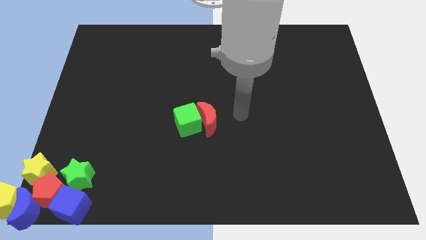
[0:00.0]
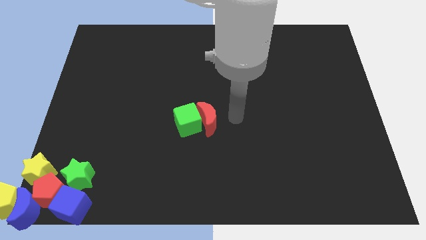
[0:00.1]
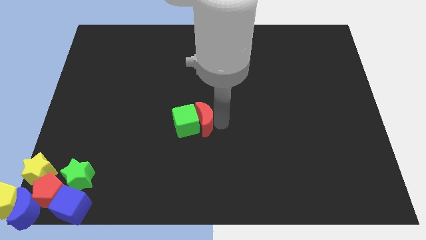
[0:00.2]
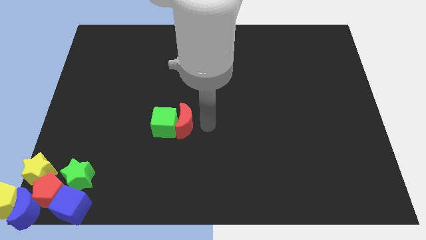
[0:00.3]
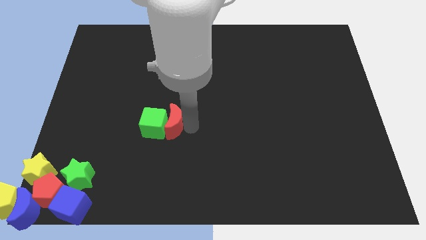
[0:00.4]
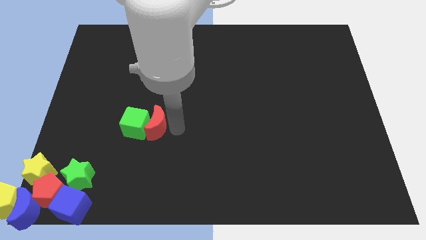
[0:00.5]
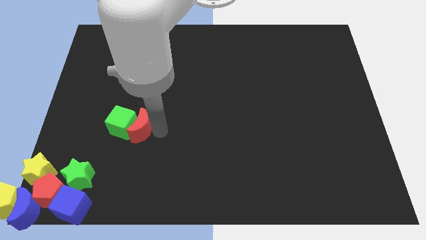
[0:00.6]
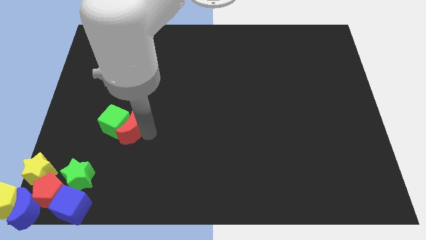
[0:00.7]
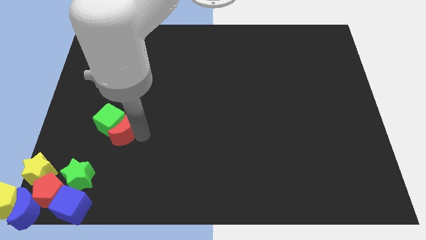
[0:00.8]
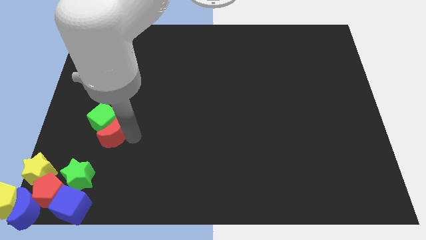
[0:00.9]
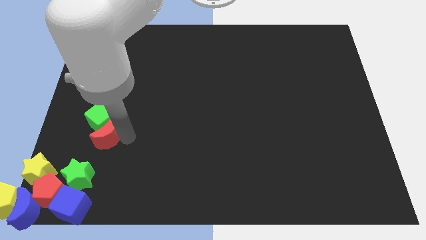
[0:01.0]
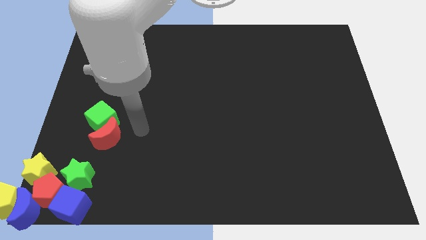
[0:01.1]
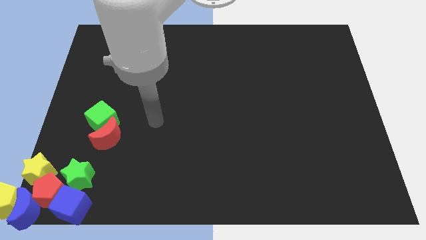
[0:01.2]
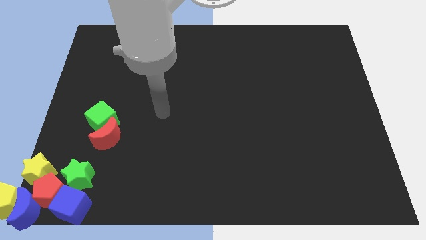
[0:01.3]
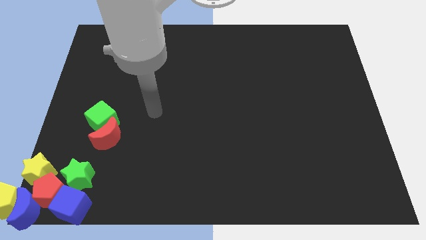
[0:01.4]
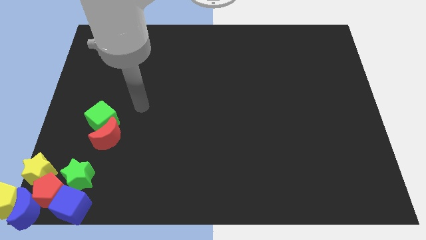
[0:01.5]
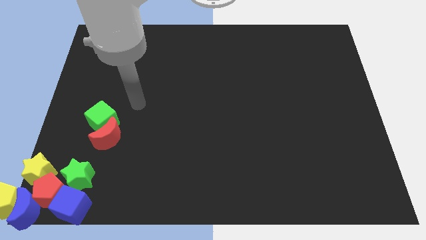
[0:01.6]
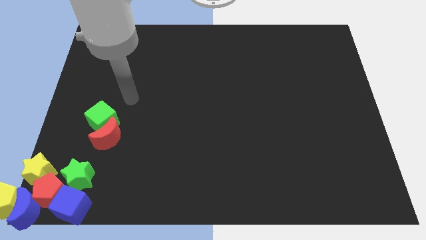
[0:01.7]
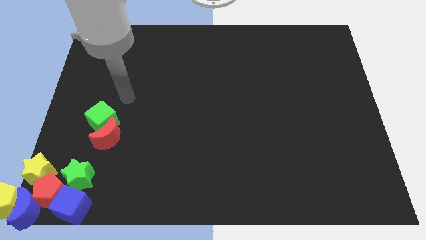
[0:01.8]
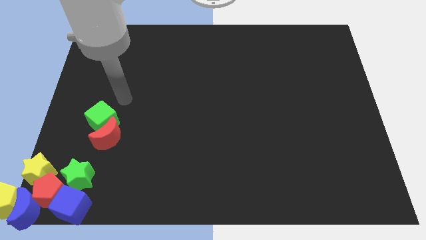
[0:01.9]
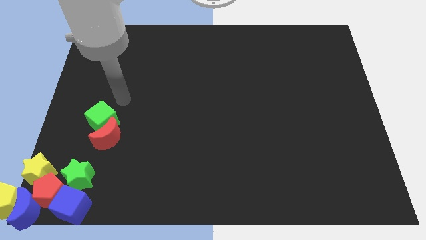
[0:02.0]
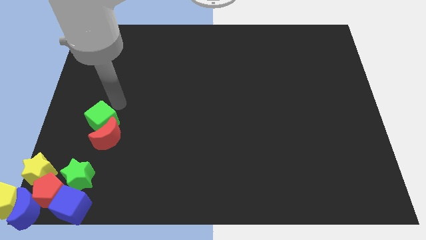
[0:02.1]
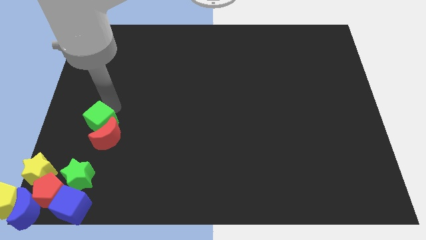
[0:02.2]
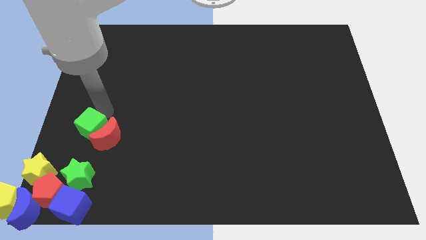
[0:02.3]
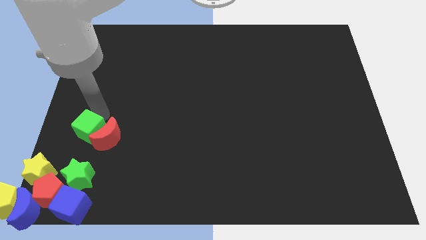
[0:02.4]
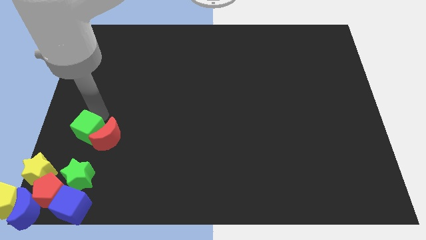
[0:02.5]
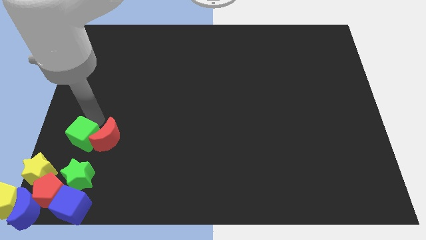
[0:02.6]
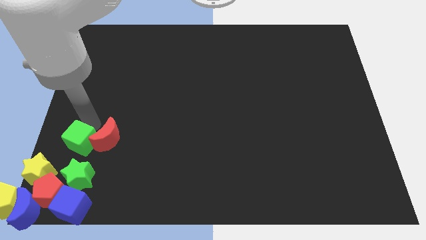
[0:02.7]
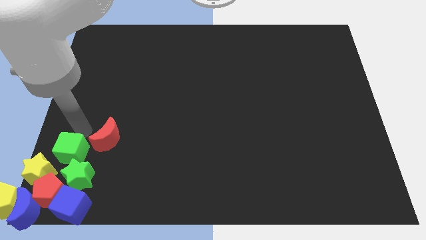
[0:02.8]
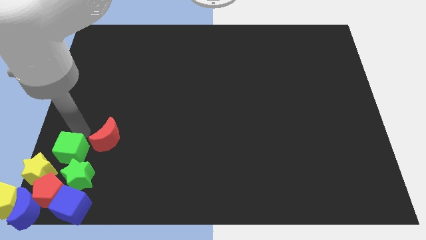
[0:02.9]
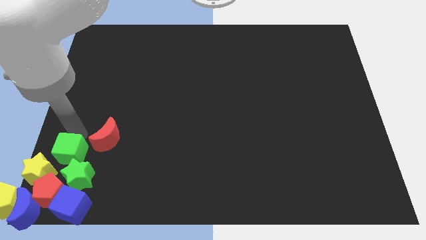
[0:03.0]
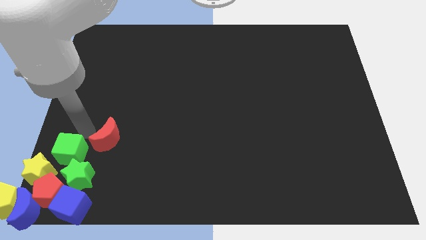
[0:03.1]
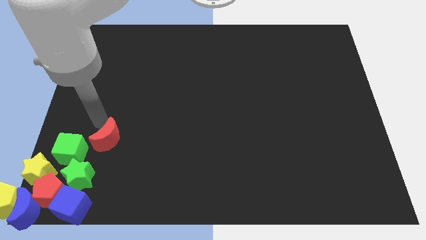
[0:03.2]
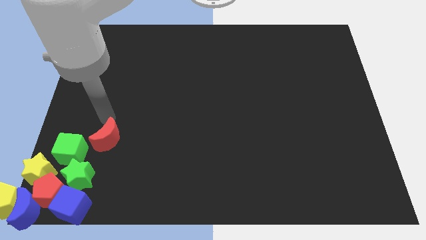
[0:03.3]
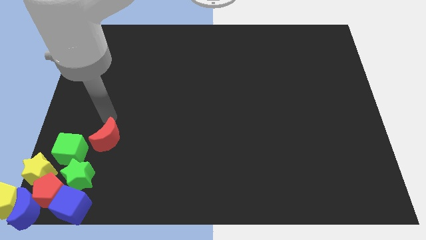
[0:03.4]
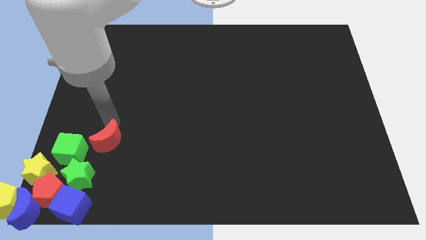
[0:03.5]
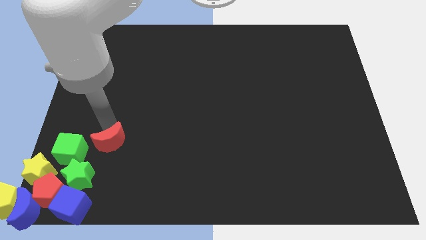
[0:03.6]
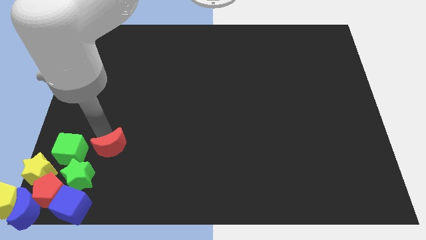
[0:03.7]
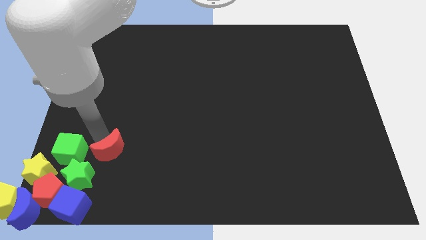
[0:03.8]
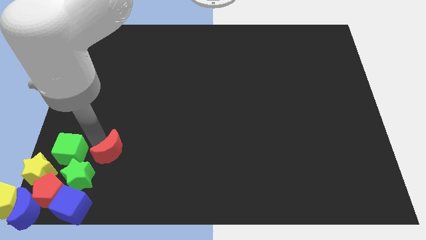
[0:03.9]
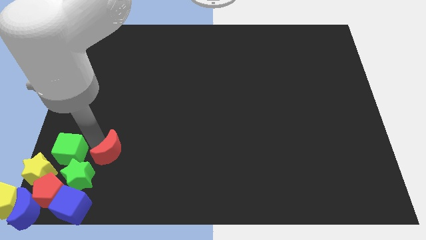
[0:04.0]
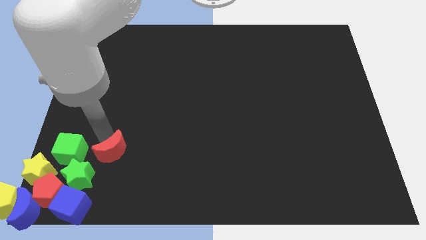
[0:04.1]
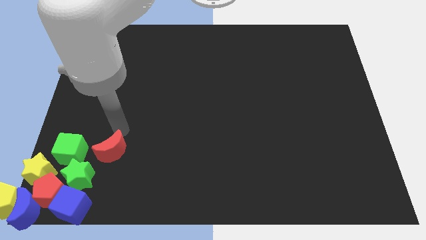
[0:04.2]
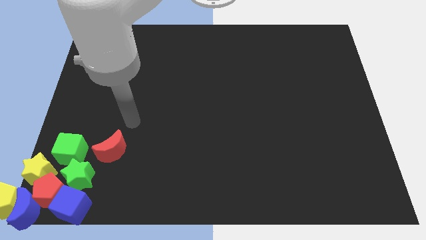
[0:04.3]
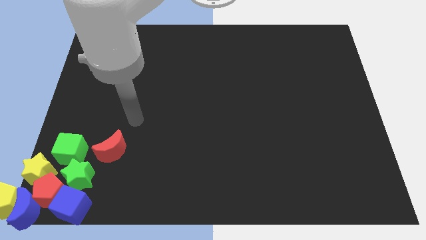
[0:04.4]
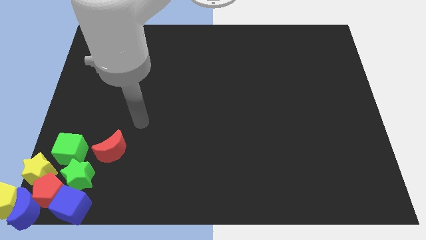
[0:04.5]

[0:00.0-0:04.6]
move the green cube on top of the green star

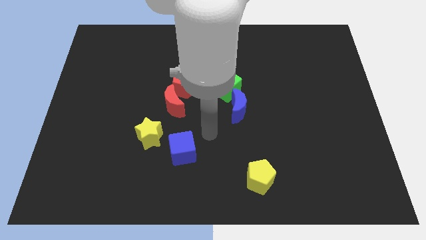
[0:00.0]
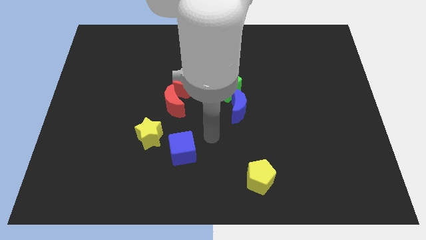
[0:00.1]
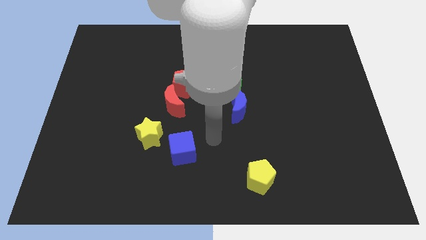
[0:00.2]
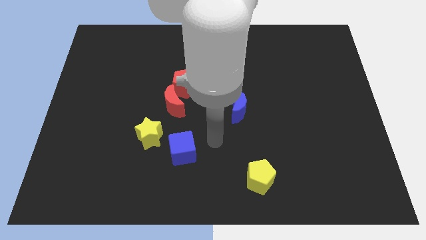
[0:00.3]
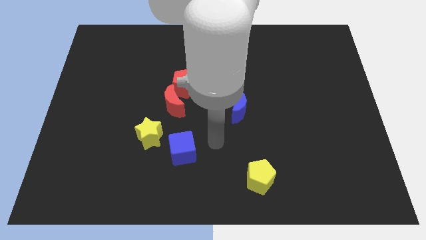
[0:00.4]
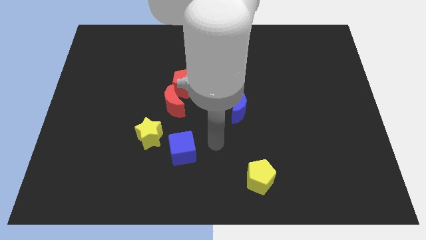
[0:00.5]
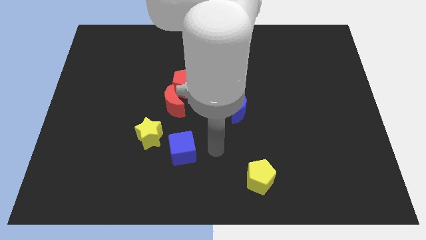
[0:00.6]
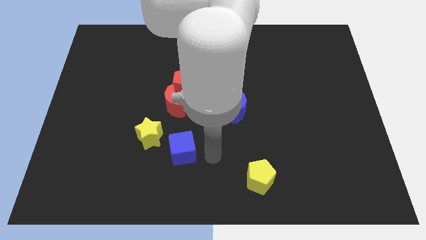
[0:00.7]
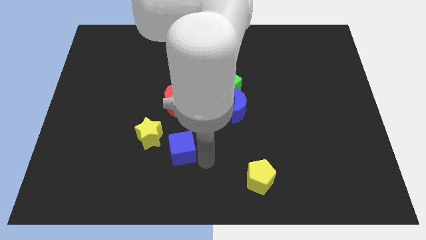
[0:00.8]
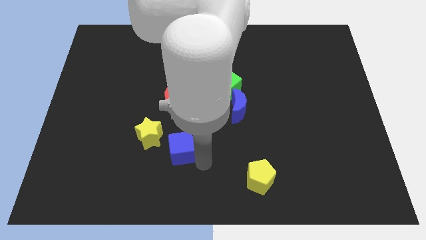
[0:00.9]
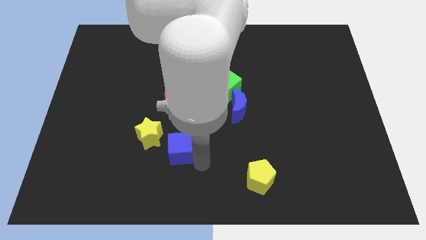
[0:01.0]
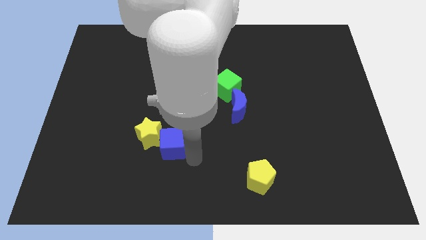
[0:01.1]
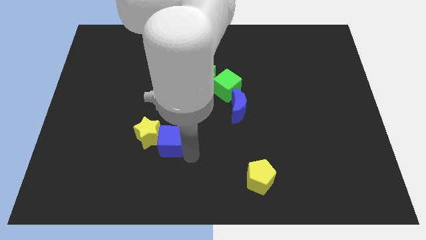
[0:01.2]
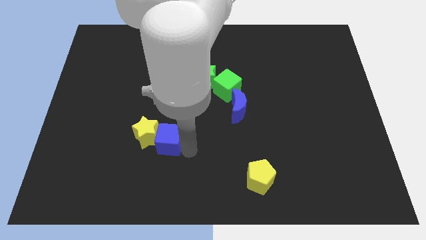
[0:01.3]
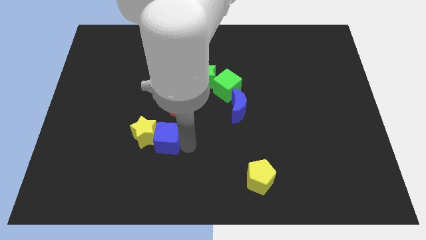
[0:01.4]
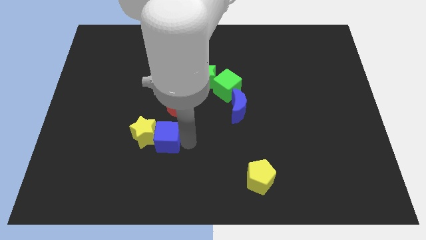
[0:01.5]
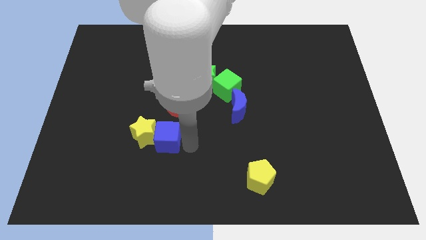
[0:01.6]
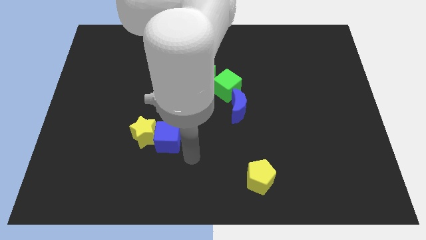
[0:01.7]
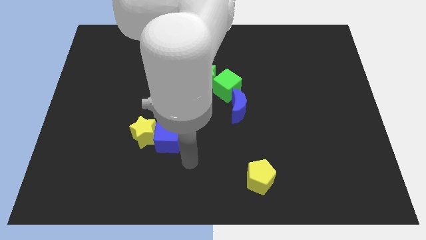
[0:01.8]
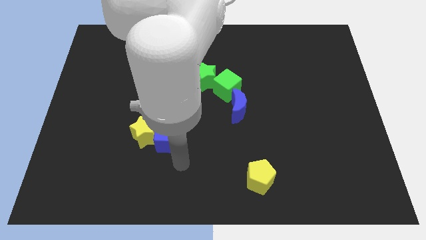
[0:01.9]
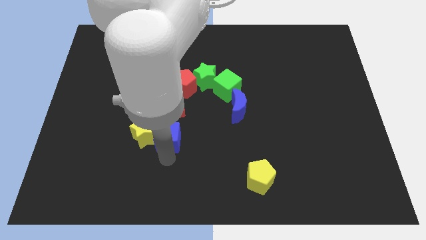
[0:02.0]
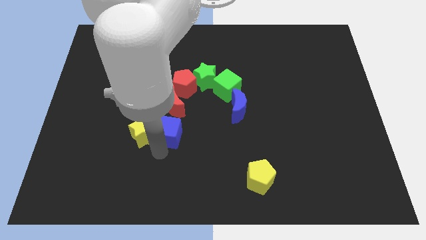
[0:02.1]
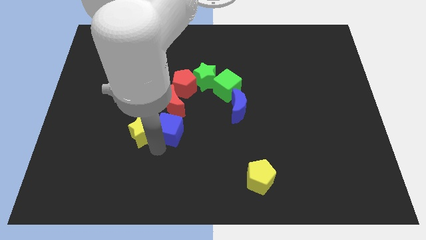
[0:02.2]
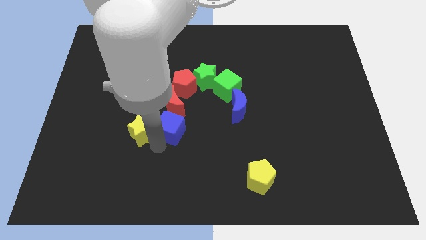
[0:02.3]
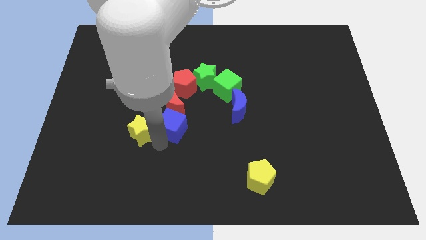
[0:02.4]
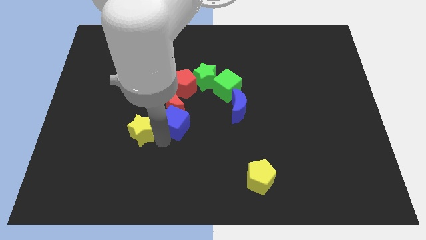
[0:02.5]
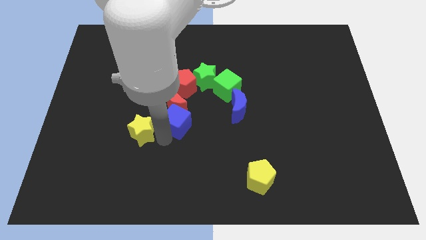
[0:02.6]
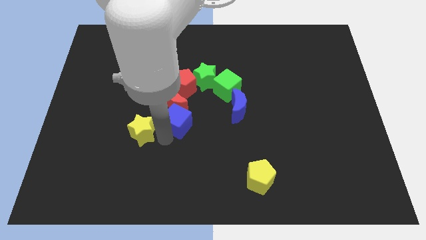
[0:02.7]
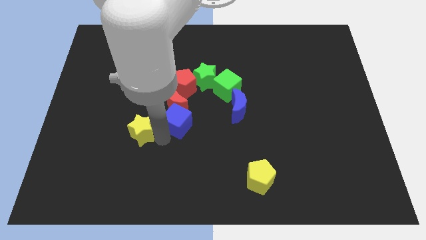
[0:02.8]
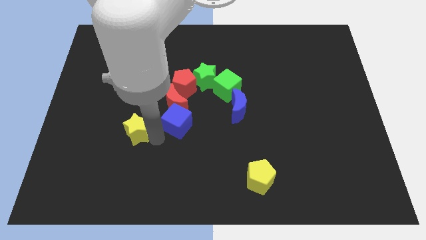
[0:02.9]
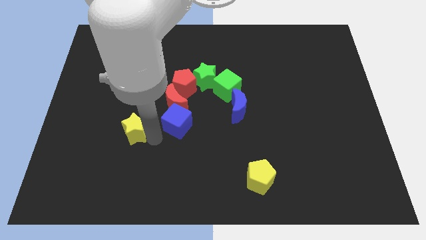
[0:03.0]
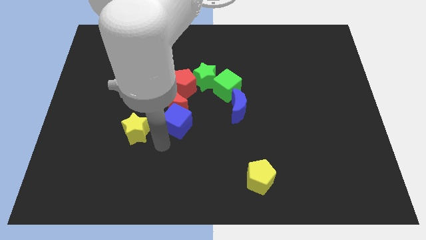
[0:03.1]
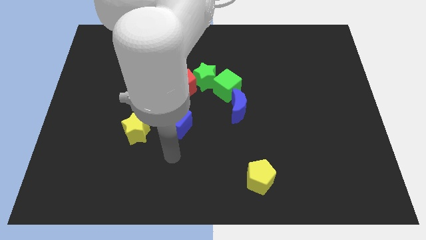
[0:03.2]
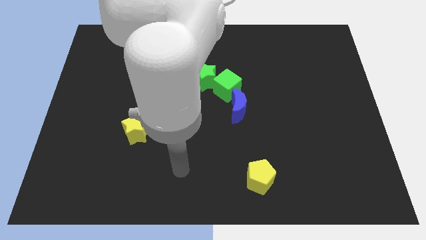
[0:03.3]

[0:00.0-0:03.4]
move the blue cube into the red crescent

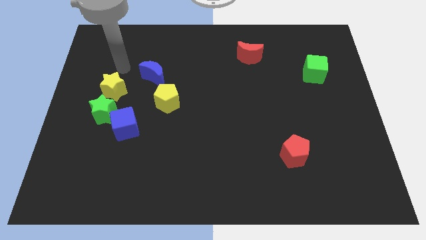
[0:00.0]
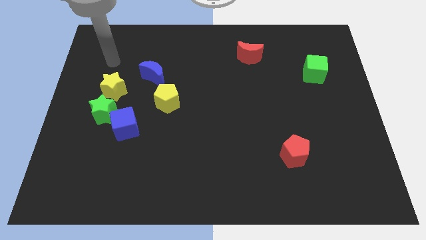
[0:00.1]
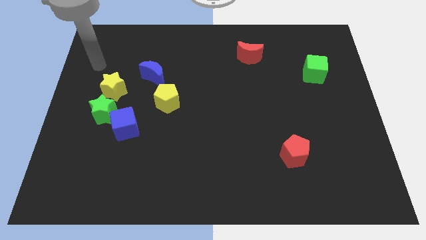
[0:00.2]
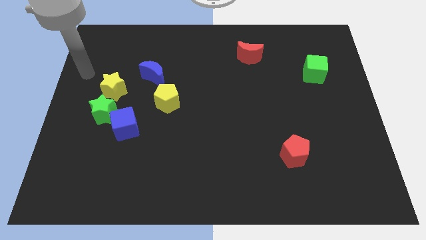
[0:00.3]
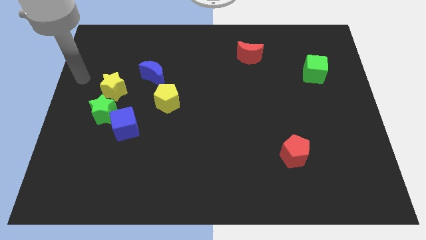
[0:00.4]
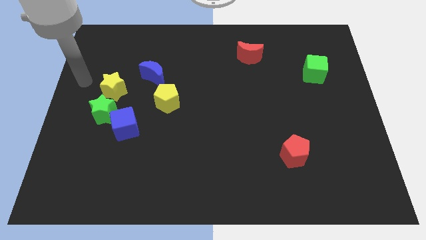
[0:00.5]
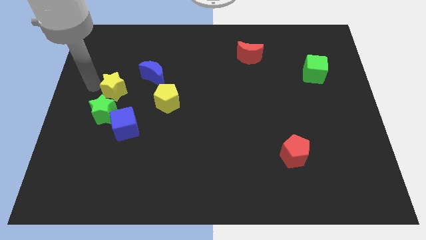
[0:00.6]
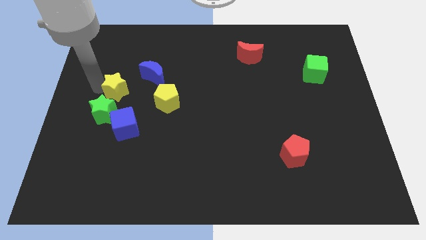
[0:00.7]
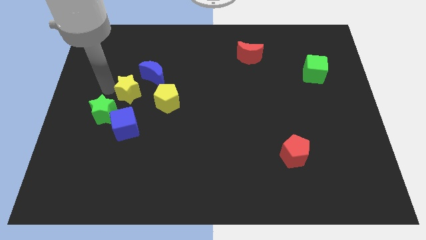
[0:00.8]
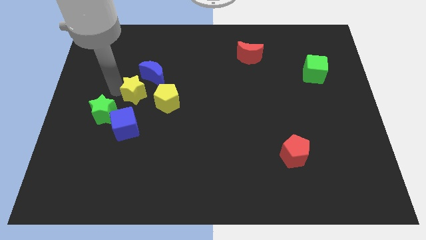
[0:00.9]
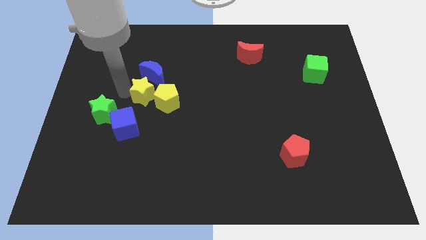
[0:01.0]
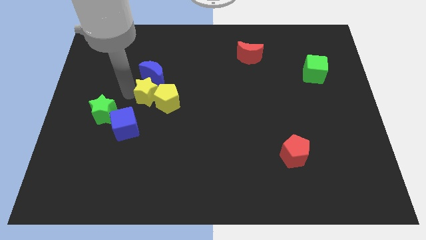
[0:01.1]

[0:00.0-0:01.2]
place yellow star below blue crescent
